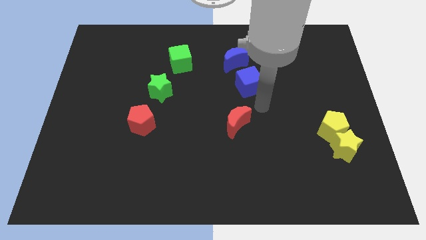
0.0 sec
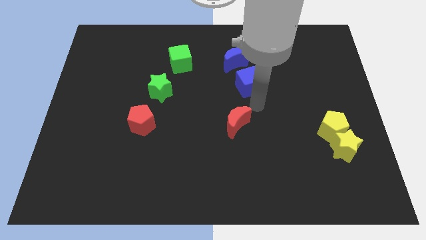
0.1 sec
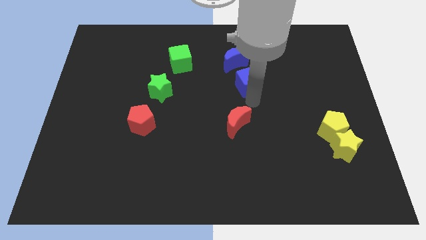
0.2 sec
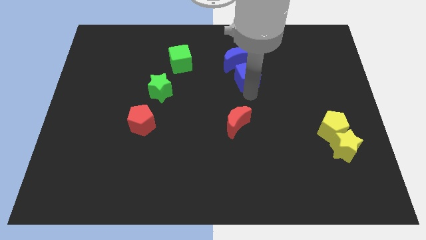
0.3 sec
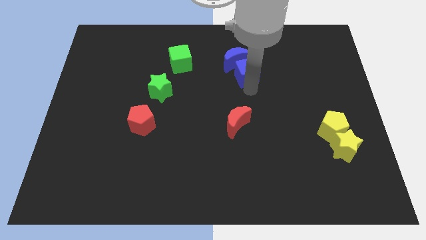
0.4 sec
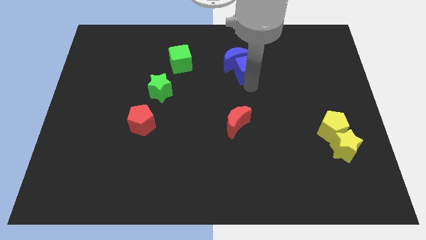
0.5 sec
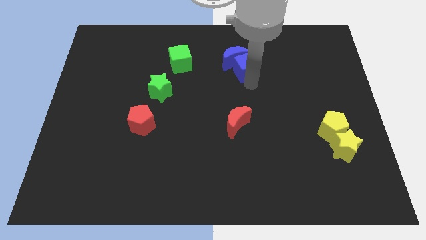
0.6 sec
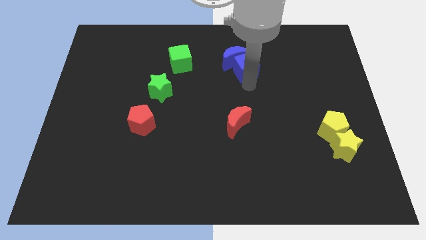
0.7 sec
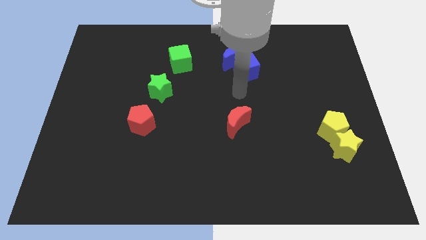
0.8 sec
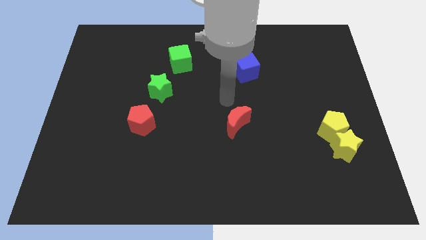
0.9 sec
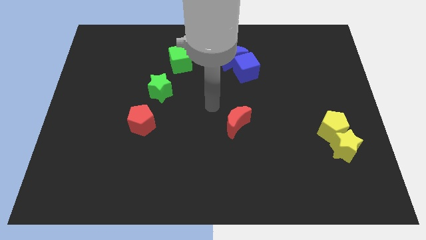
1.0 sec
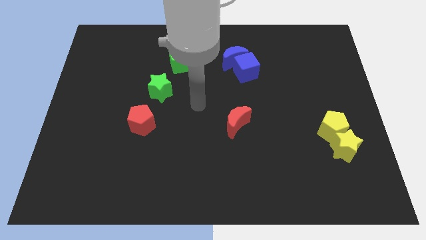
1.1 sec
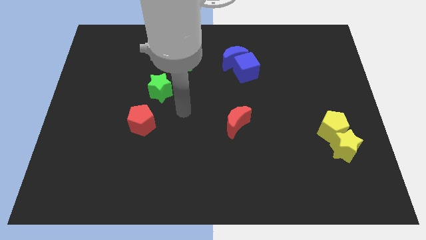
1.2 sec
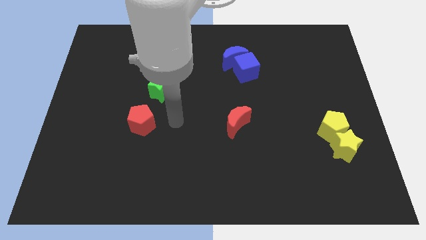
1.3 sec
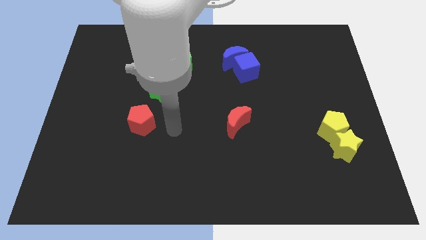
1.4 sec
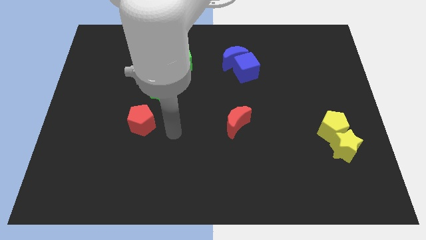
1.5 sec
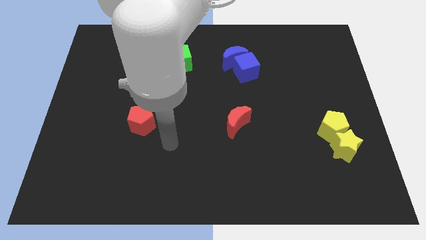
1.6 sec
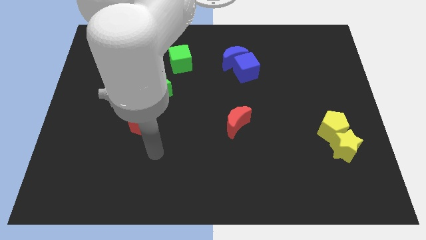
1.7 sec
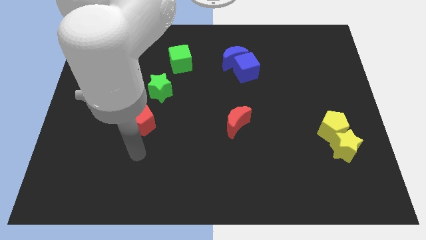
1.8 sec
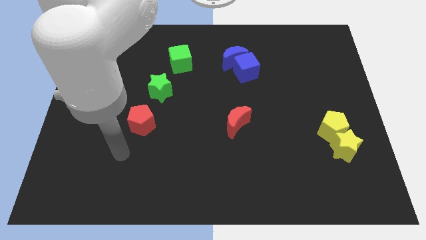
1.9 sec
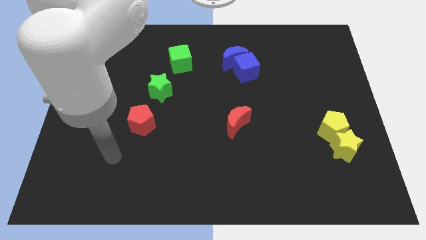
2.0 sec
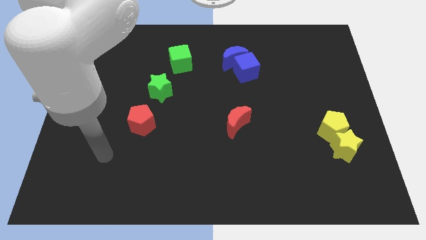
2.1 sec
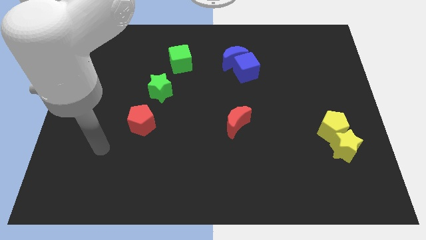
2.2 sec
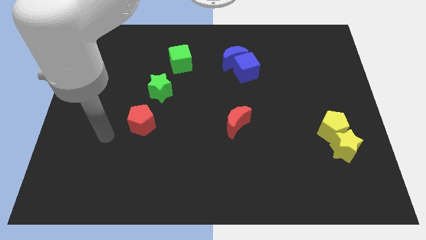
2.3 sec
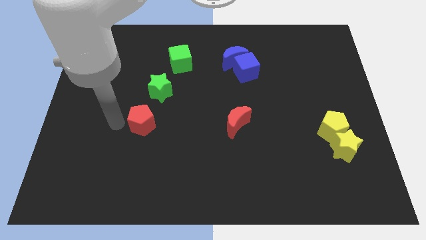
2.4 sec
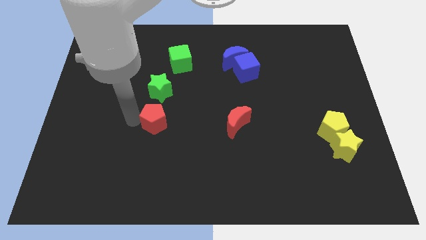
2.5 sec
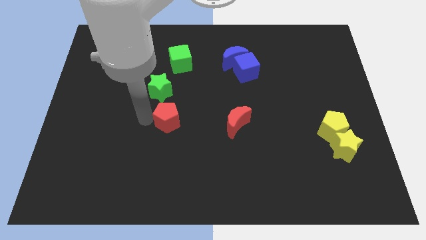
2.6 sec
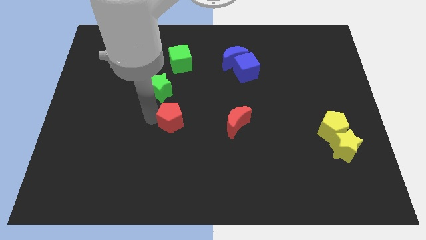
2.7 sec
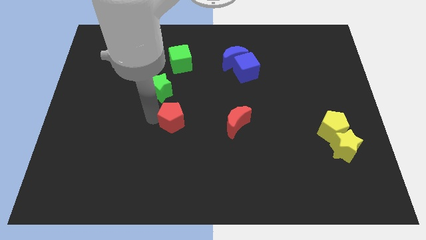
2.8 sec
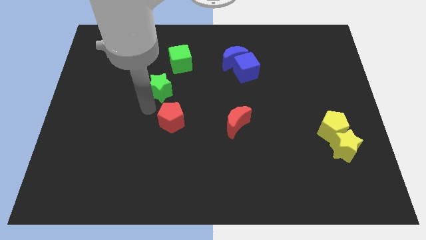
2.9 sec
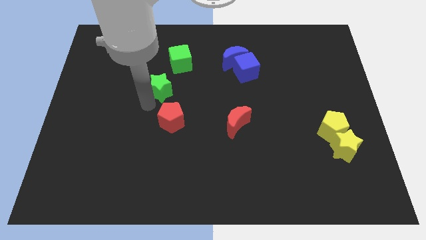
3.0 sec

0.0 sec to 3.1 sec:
move red pentagon diagonal to the left of the red crescent

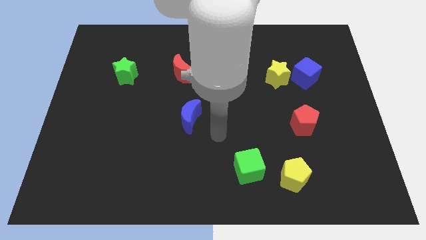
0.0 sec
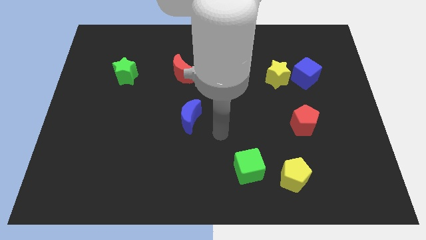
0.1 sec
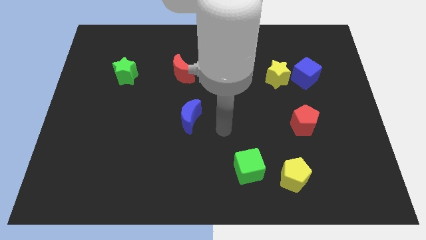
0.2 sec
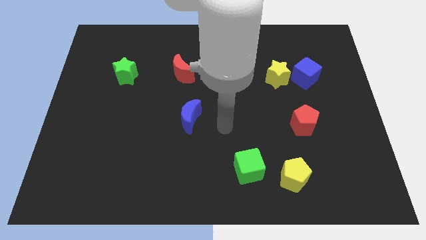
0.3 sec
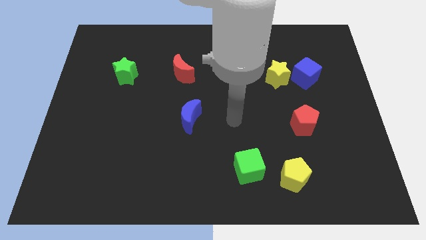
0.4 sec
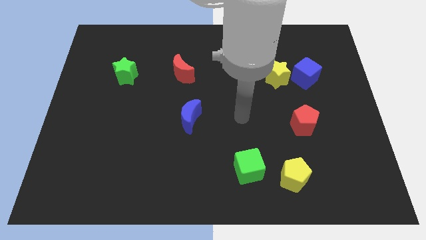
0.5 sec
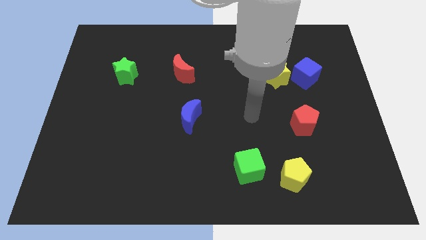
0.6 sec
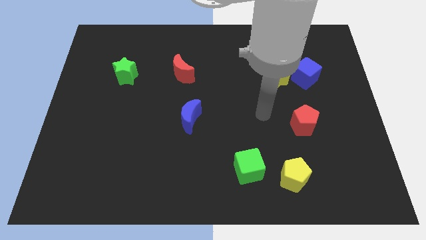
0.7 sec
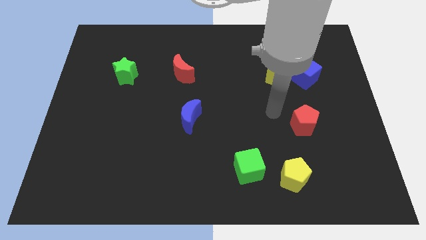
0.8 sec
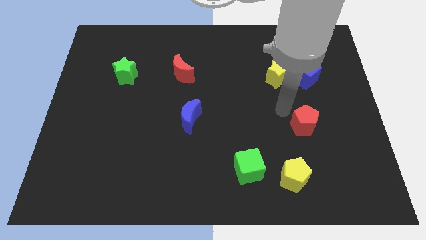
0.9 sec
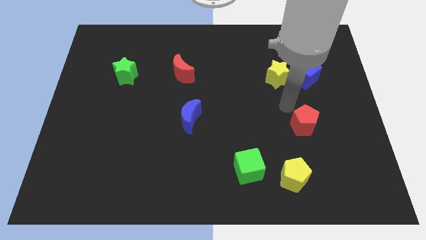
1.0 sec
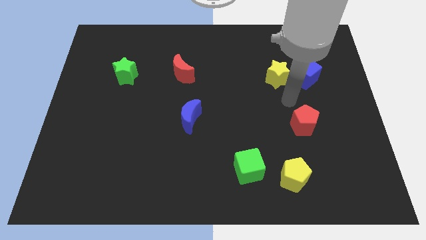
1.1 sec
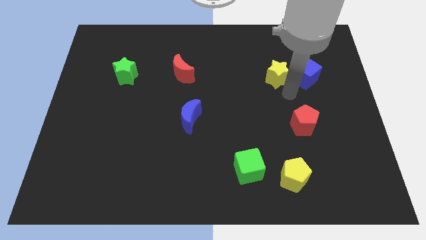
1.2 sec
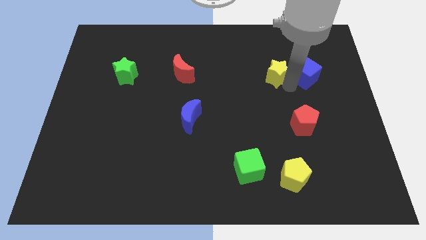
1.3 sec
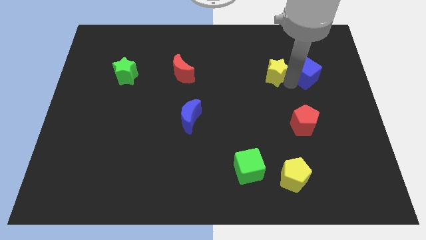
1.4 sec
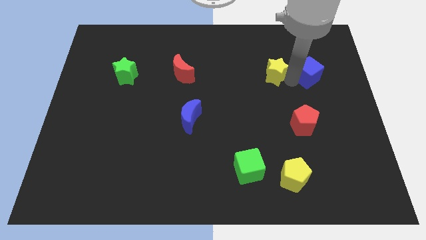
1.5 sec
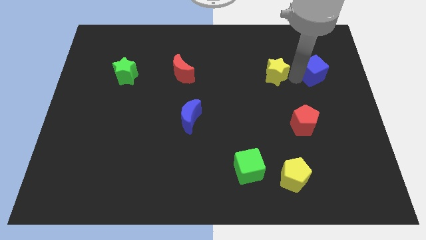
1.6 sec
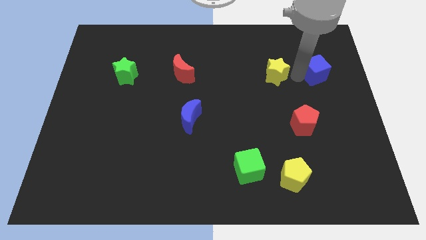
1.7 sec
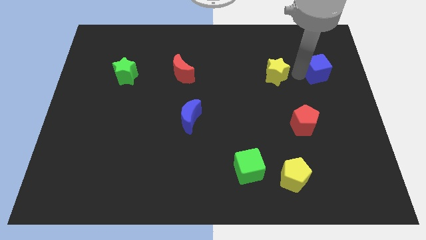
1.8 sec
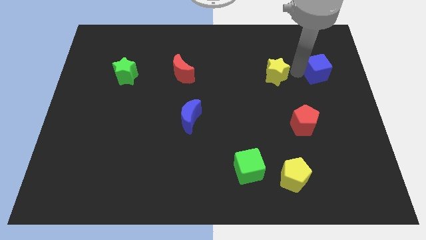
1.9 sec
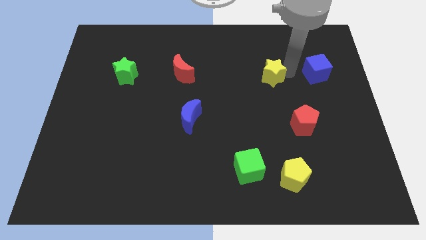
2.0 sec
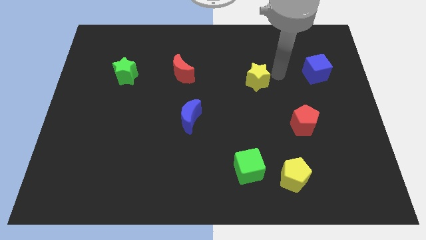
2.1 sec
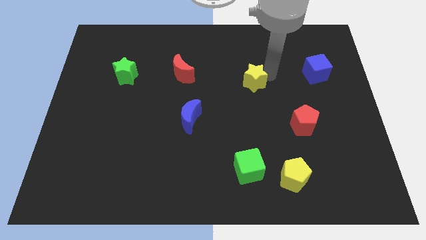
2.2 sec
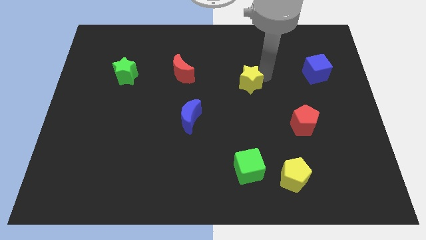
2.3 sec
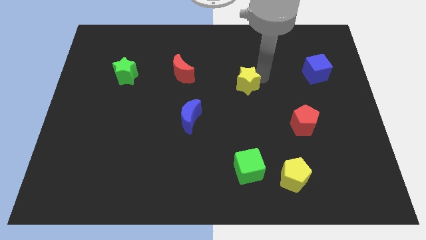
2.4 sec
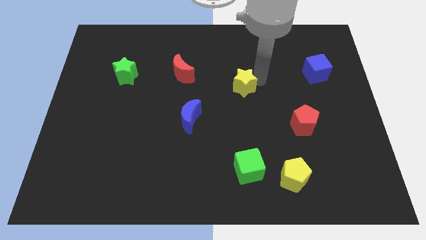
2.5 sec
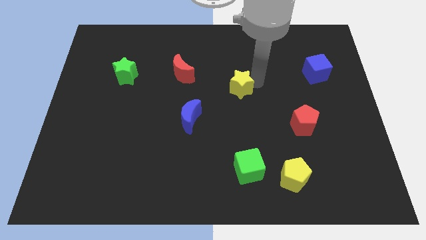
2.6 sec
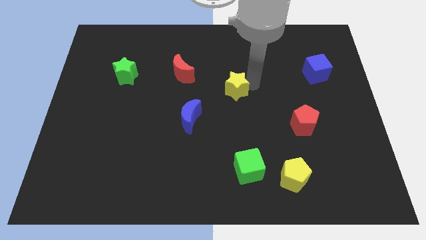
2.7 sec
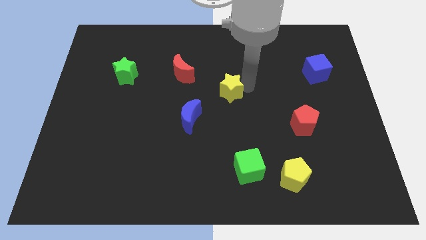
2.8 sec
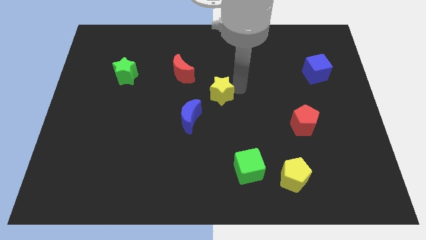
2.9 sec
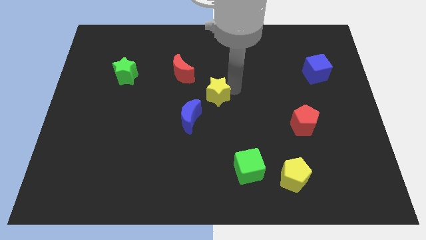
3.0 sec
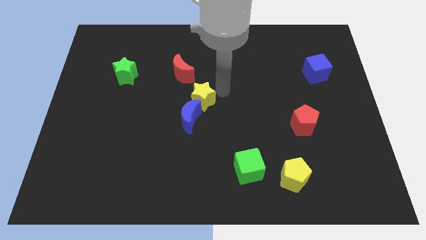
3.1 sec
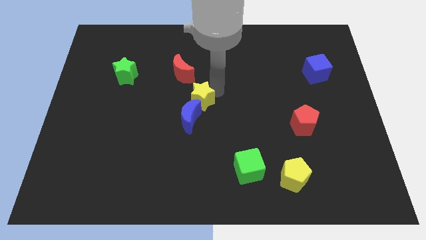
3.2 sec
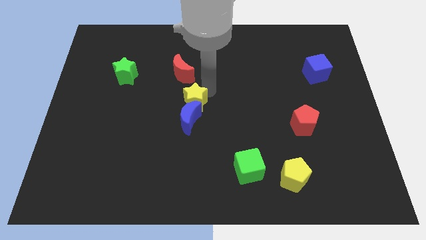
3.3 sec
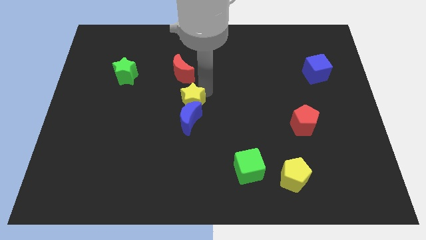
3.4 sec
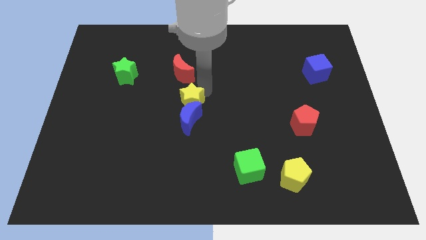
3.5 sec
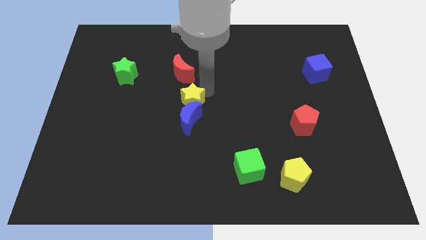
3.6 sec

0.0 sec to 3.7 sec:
separate yellow star away from blue cube

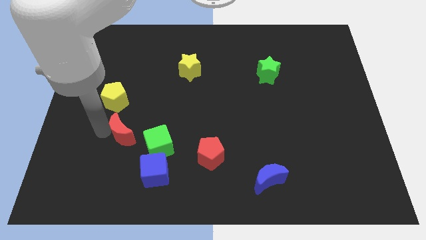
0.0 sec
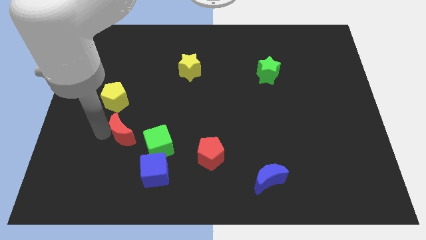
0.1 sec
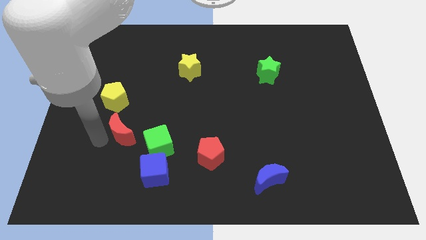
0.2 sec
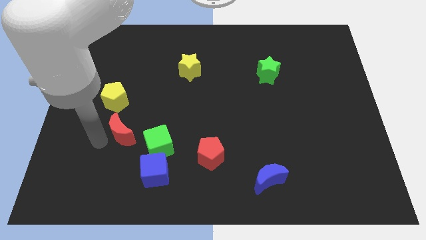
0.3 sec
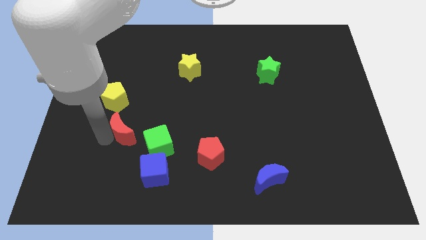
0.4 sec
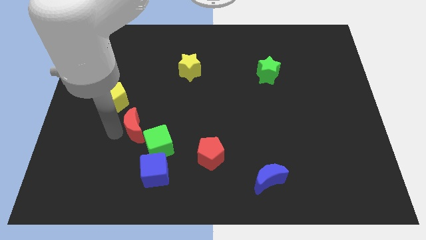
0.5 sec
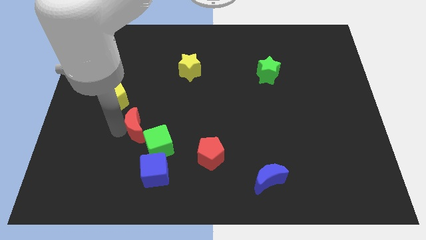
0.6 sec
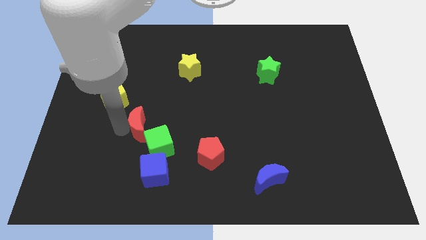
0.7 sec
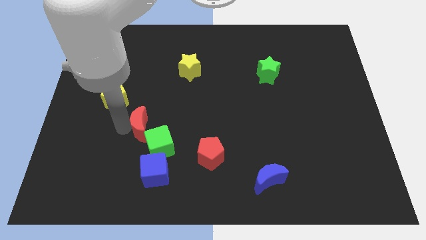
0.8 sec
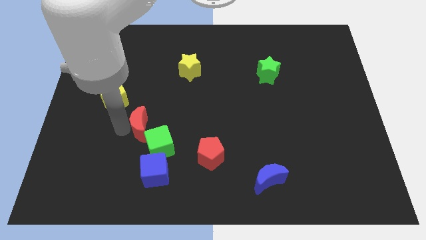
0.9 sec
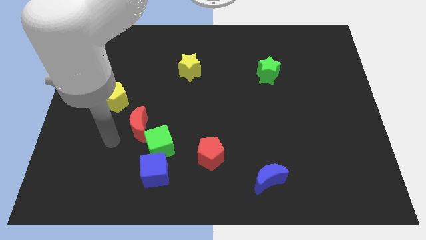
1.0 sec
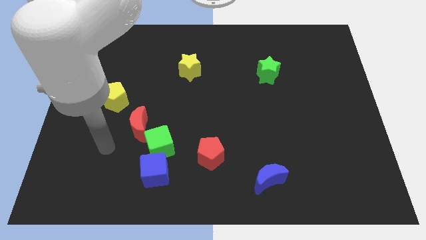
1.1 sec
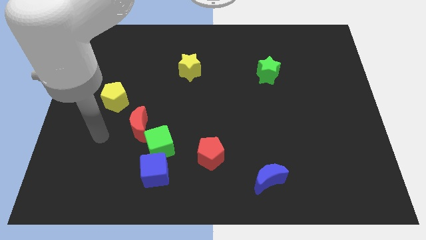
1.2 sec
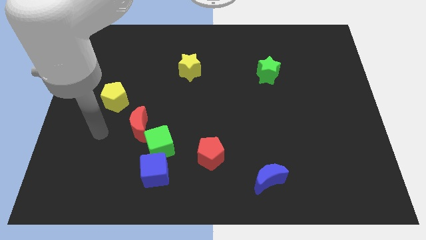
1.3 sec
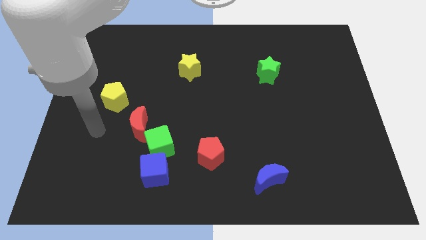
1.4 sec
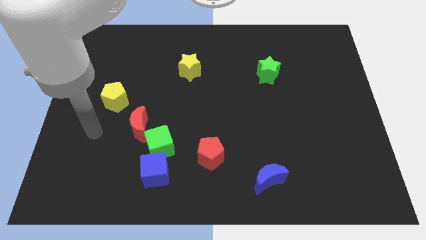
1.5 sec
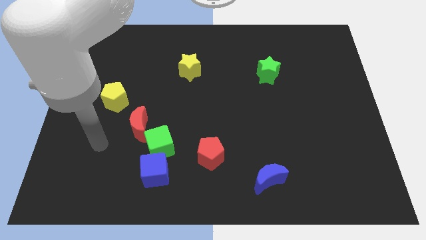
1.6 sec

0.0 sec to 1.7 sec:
push the red moon into the green cube

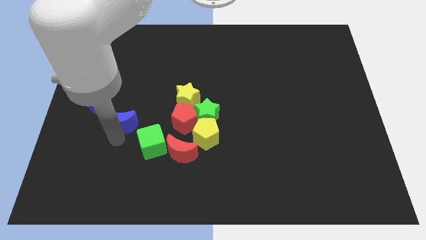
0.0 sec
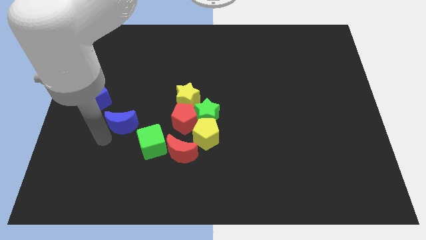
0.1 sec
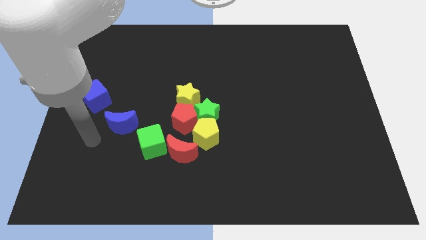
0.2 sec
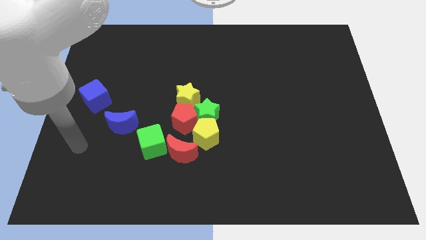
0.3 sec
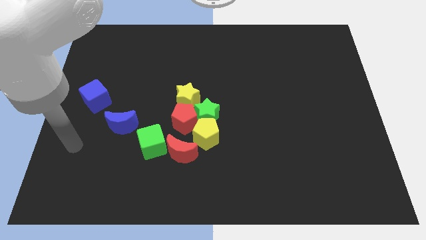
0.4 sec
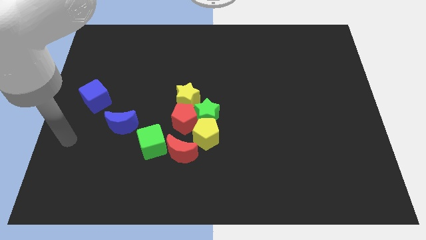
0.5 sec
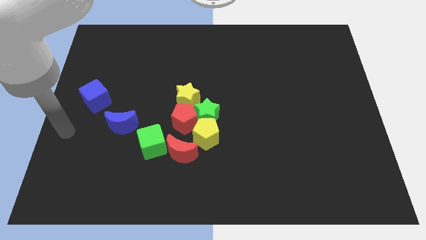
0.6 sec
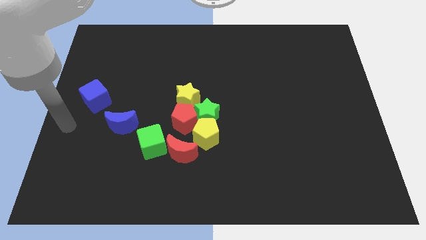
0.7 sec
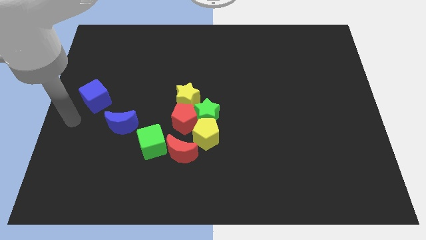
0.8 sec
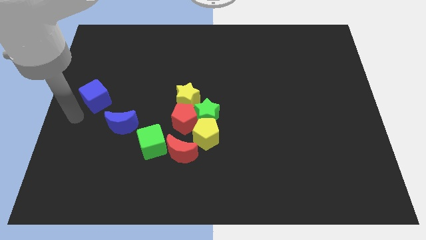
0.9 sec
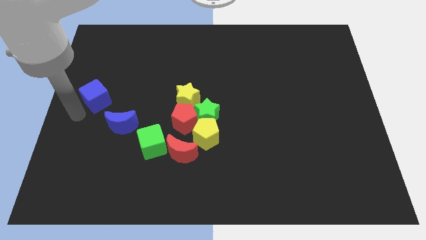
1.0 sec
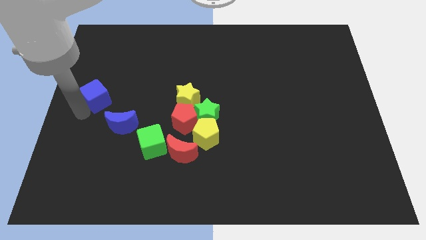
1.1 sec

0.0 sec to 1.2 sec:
move your hand towards the blue cube
